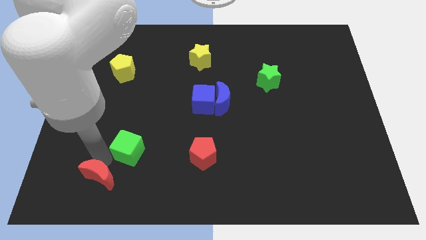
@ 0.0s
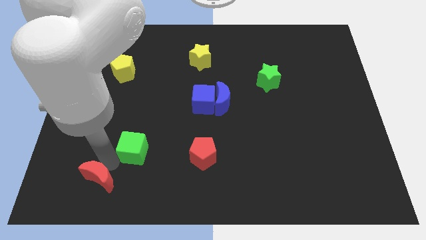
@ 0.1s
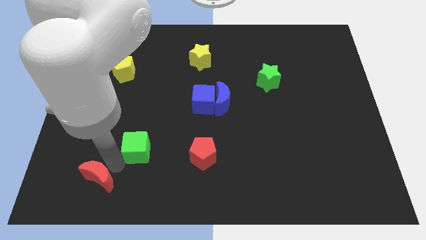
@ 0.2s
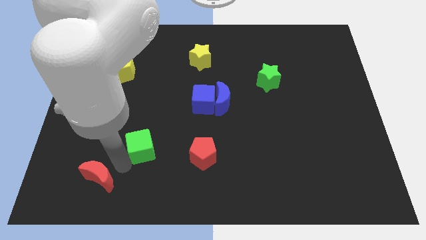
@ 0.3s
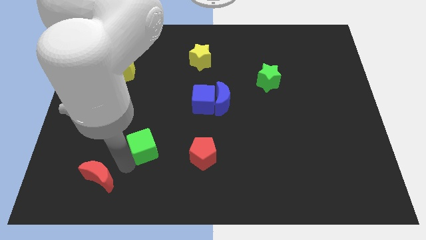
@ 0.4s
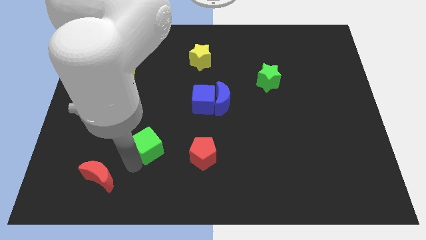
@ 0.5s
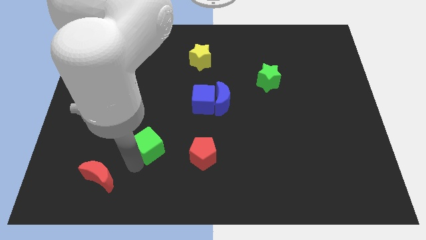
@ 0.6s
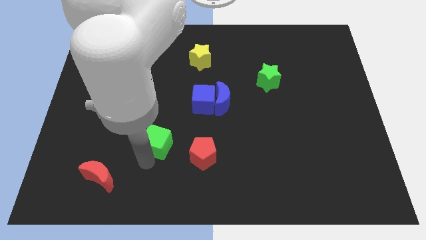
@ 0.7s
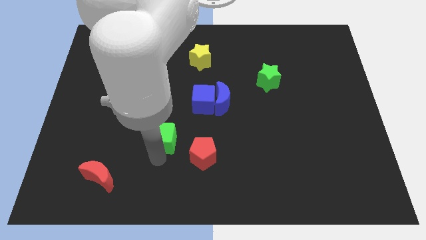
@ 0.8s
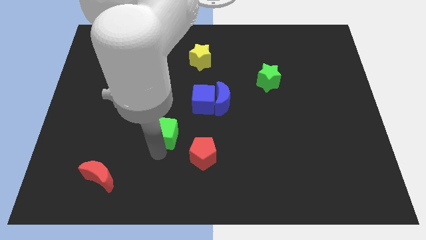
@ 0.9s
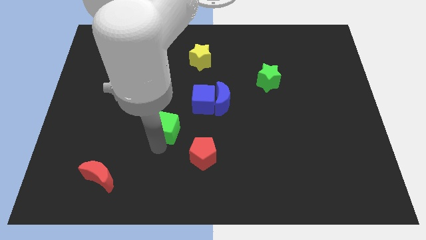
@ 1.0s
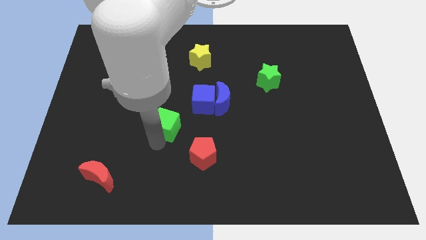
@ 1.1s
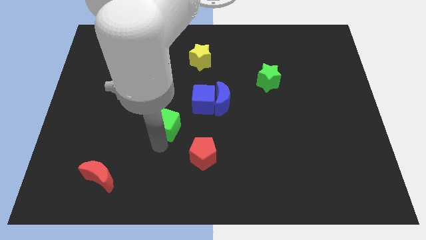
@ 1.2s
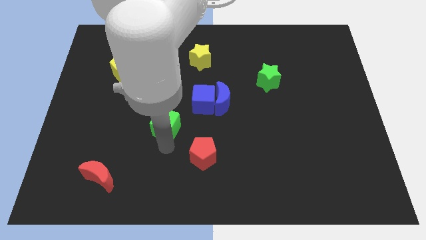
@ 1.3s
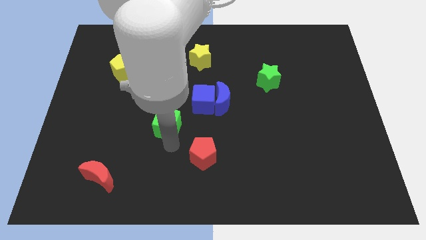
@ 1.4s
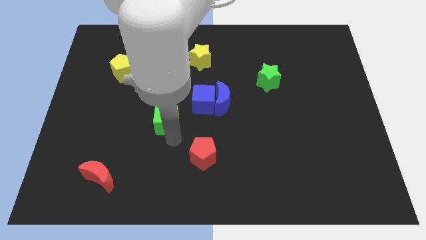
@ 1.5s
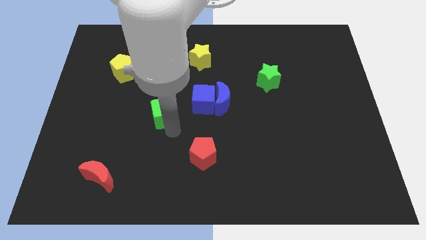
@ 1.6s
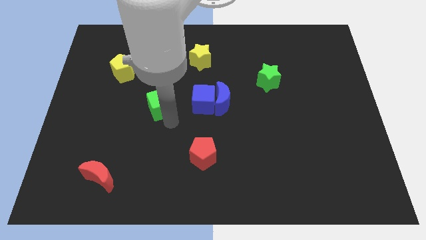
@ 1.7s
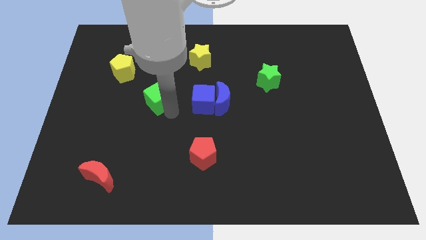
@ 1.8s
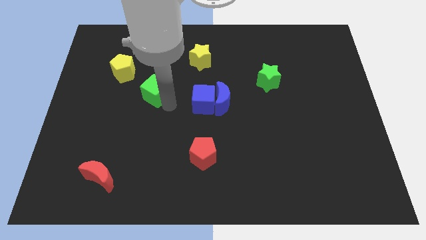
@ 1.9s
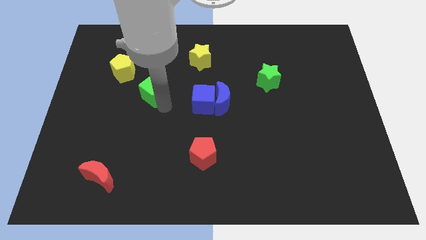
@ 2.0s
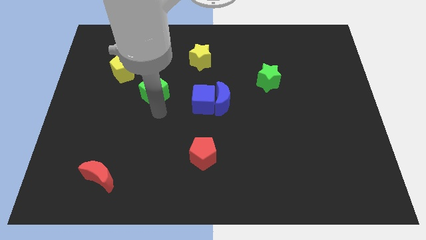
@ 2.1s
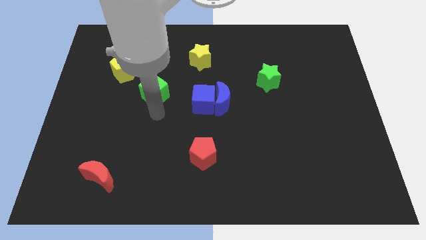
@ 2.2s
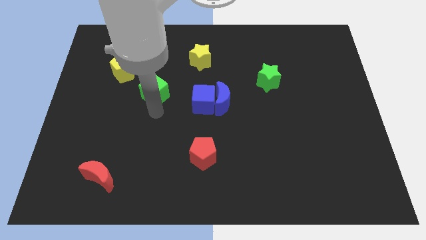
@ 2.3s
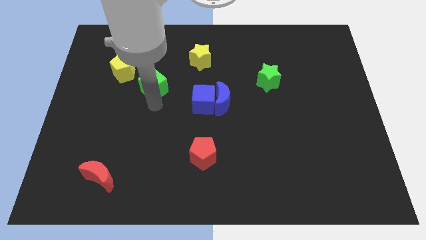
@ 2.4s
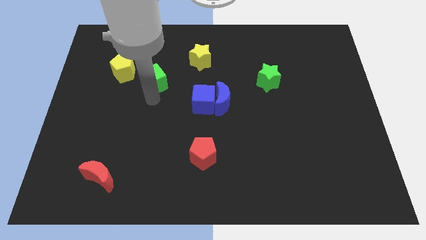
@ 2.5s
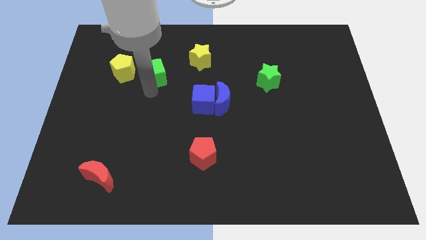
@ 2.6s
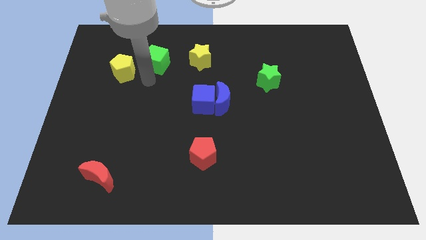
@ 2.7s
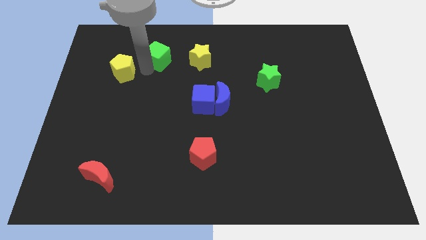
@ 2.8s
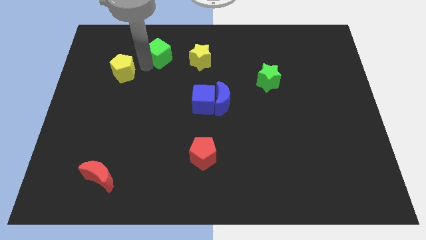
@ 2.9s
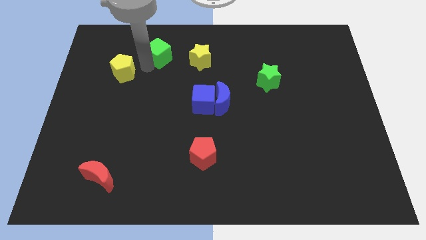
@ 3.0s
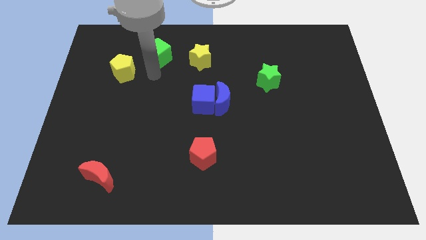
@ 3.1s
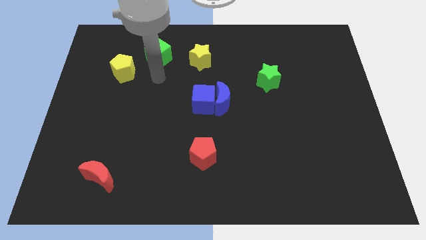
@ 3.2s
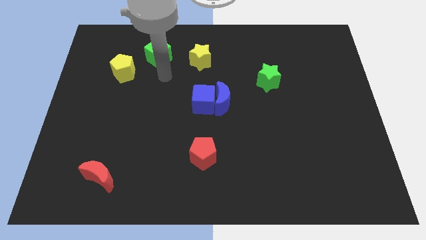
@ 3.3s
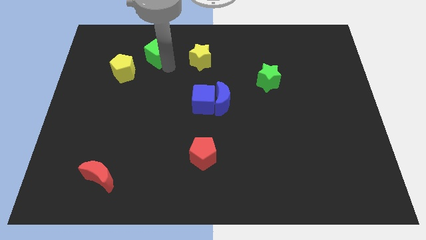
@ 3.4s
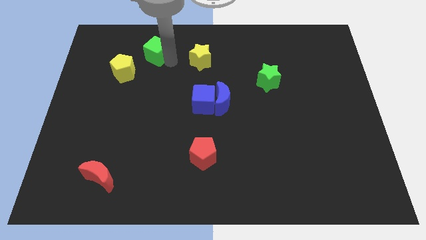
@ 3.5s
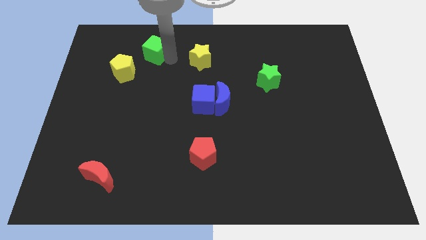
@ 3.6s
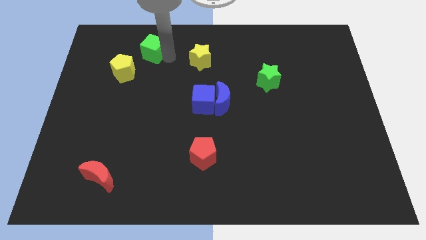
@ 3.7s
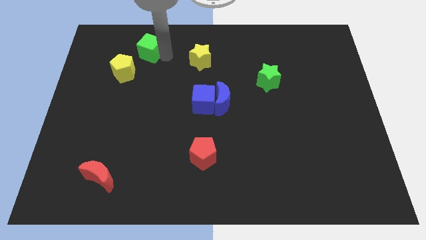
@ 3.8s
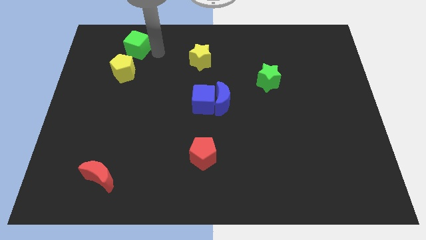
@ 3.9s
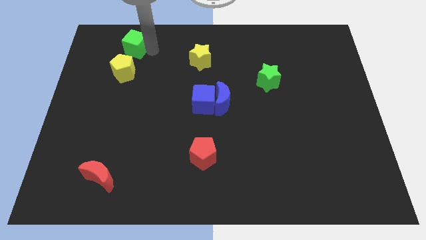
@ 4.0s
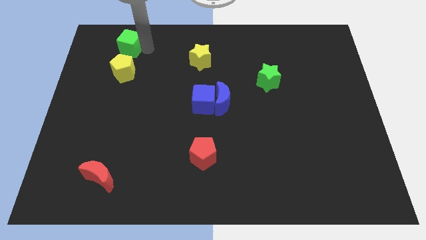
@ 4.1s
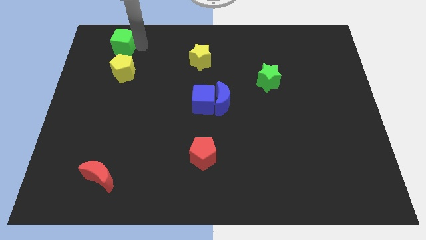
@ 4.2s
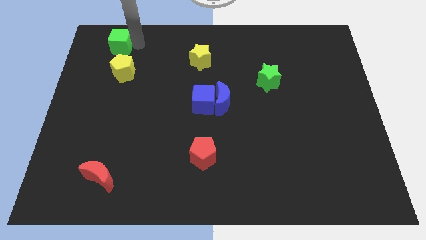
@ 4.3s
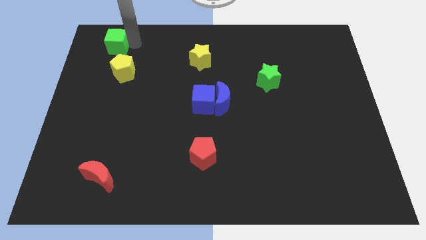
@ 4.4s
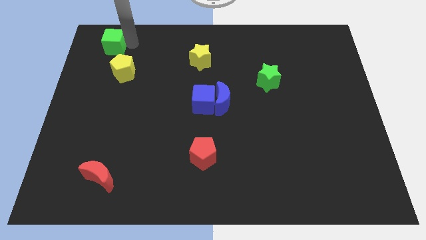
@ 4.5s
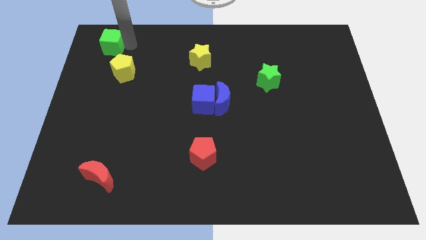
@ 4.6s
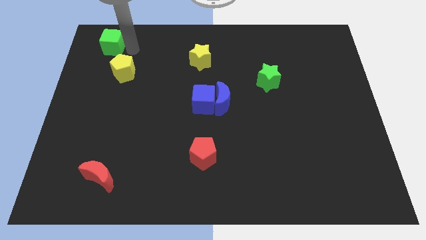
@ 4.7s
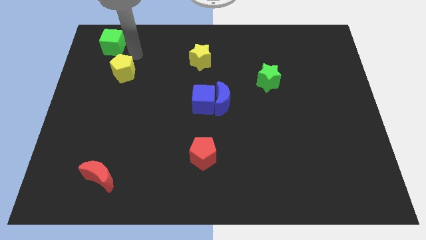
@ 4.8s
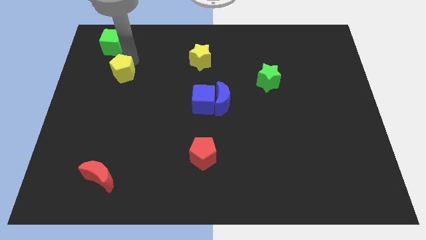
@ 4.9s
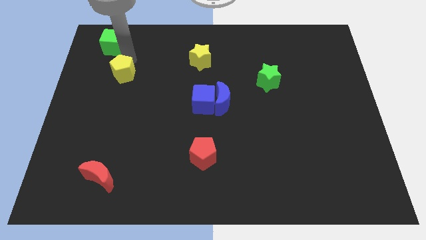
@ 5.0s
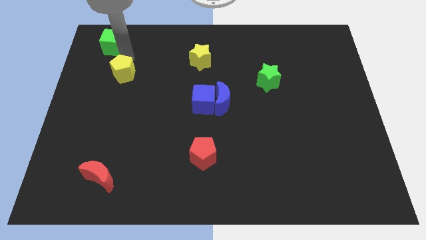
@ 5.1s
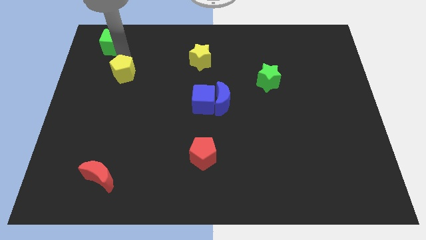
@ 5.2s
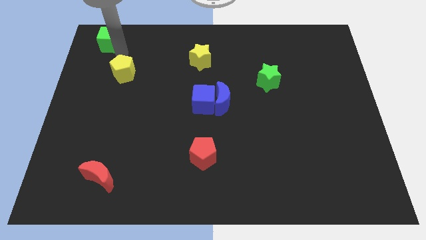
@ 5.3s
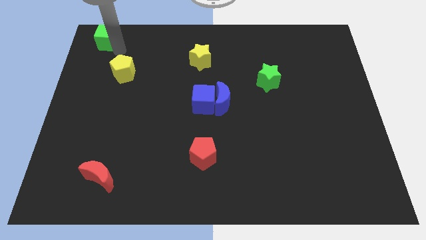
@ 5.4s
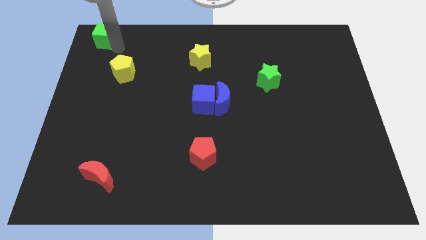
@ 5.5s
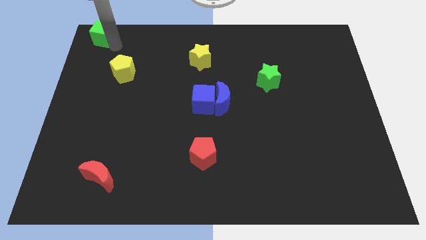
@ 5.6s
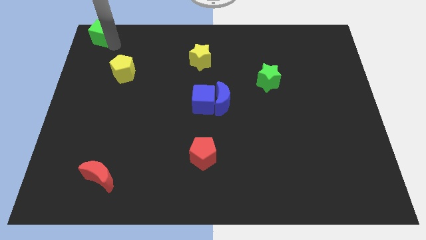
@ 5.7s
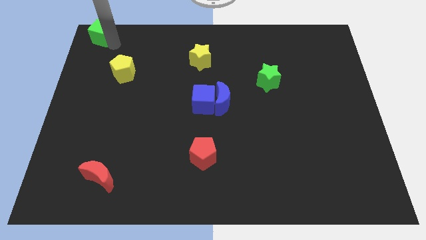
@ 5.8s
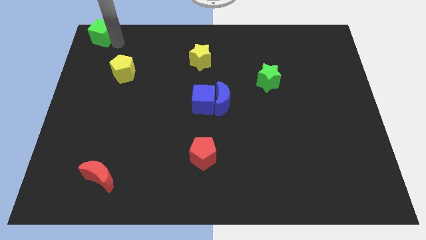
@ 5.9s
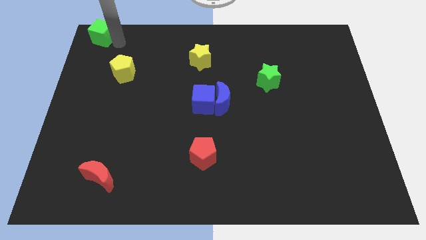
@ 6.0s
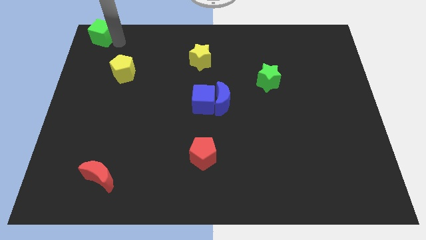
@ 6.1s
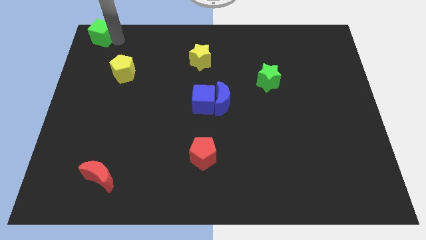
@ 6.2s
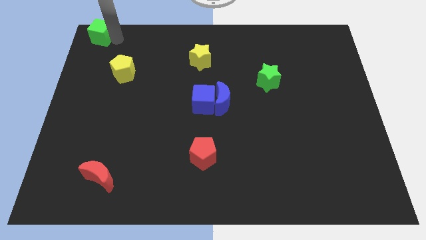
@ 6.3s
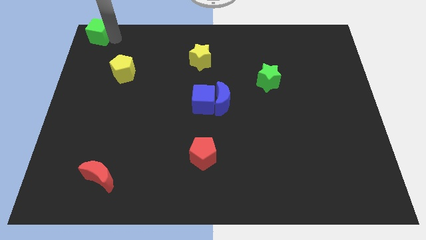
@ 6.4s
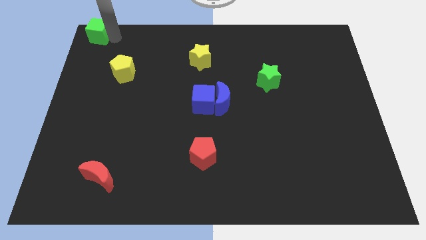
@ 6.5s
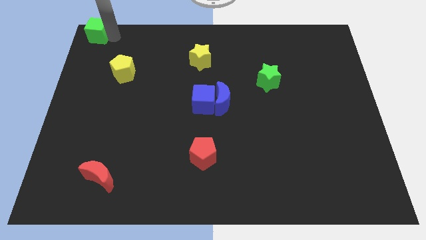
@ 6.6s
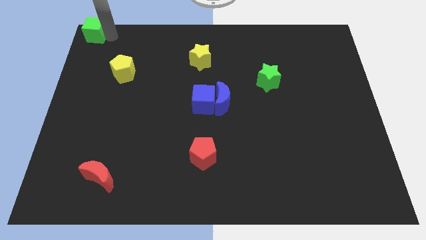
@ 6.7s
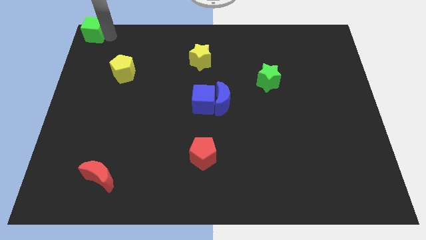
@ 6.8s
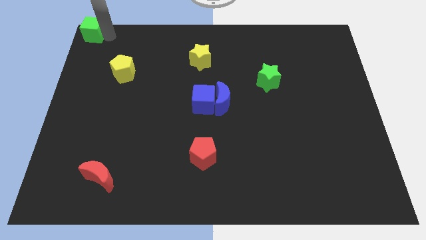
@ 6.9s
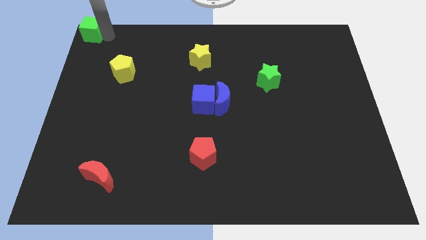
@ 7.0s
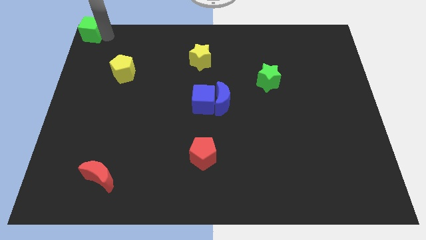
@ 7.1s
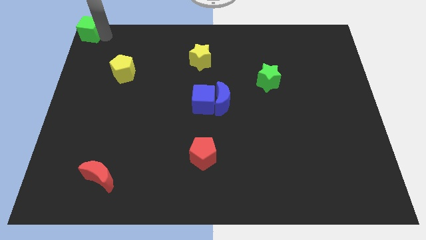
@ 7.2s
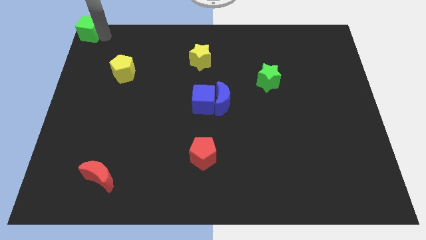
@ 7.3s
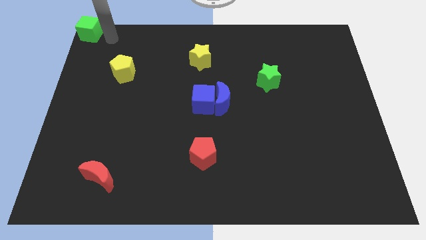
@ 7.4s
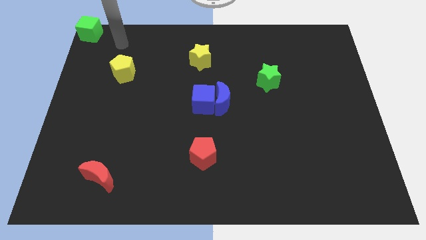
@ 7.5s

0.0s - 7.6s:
move the blue cube to the top left corner on the board

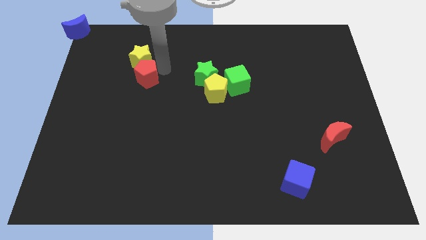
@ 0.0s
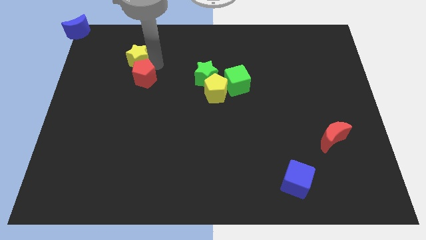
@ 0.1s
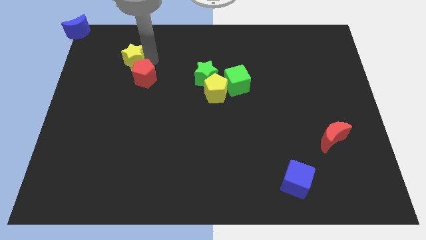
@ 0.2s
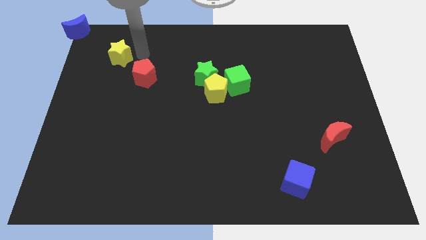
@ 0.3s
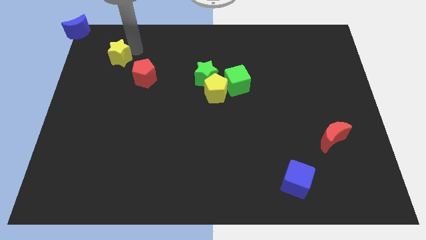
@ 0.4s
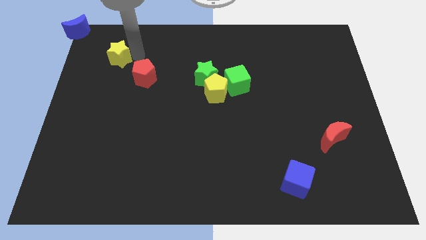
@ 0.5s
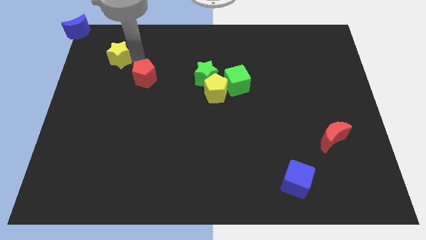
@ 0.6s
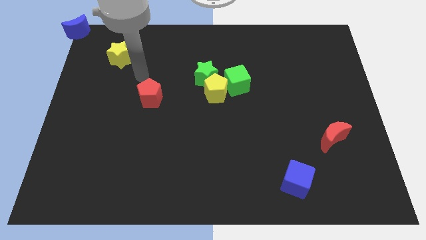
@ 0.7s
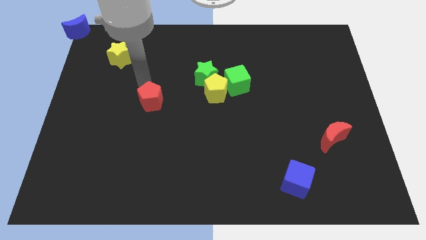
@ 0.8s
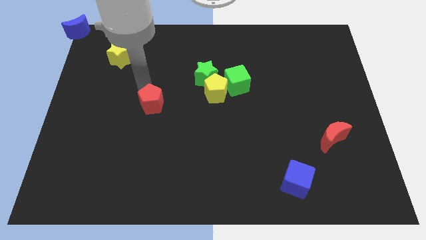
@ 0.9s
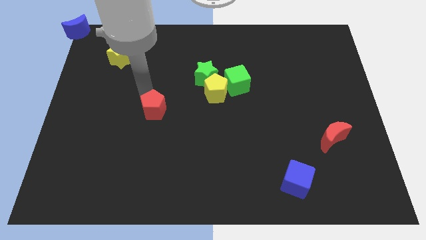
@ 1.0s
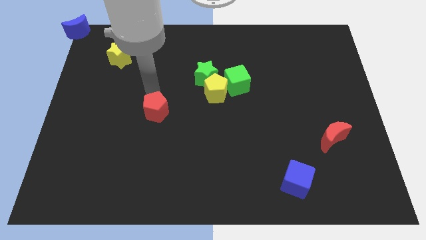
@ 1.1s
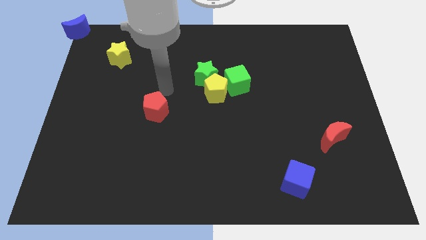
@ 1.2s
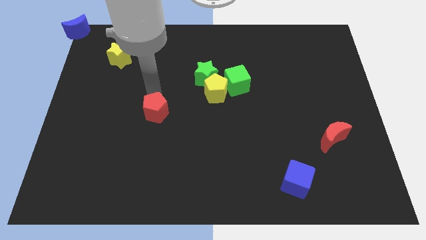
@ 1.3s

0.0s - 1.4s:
separate the yellow star from the red pentagon
